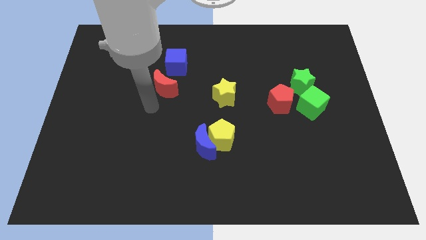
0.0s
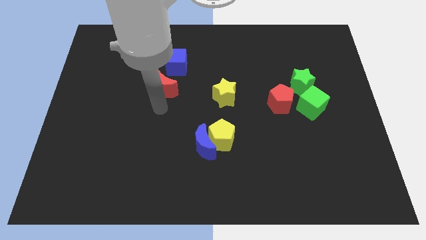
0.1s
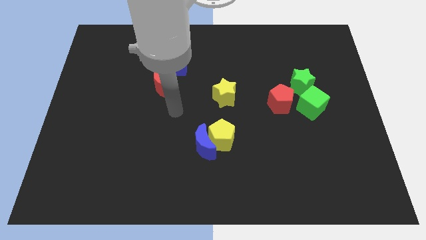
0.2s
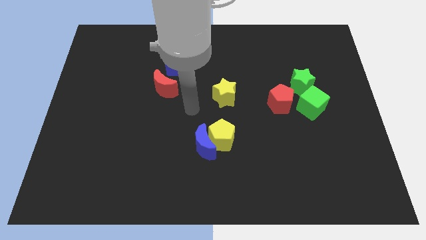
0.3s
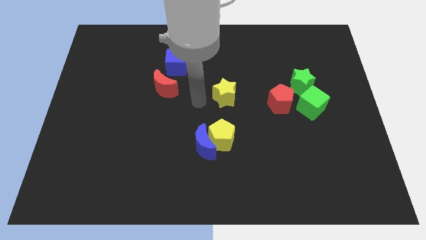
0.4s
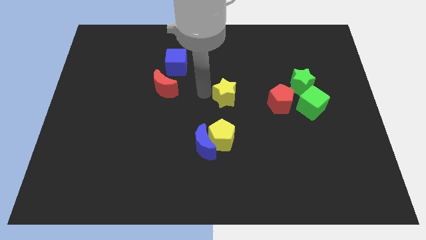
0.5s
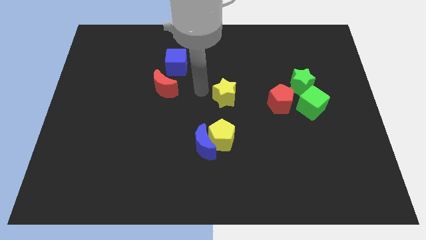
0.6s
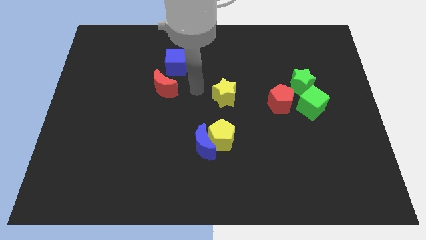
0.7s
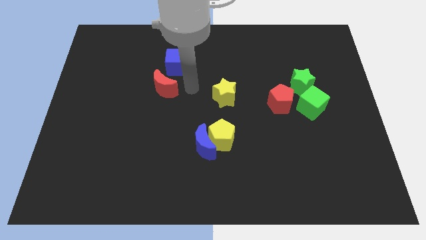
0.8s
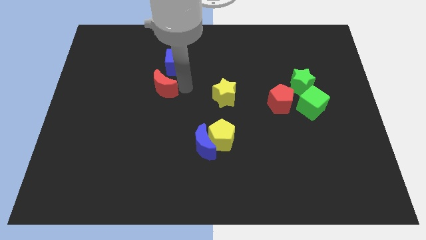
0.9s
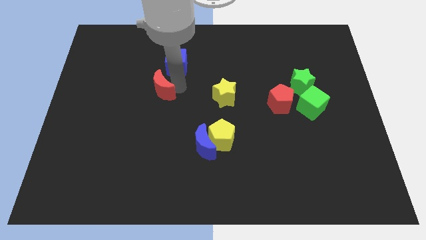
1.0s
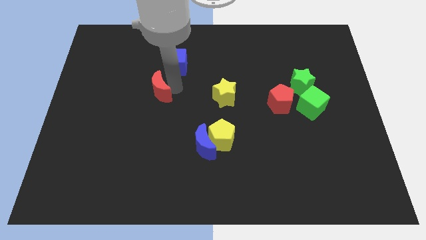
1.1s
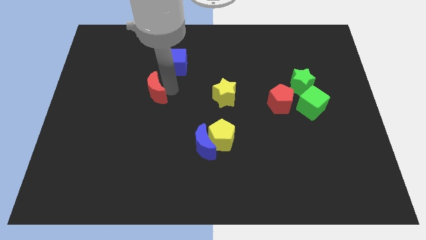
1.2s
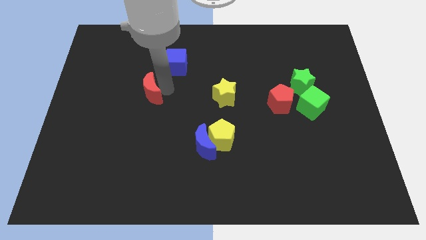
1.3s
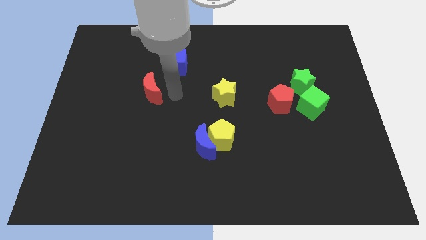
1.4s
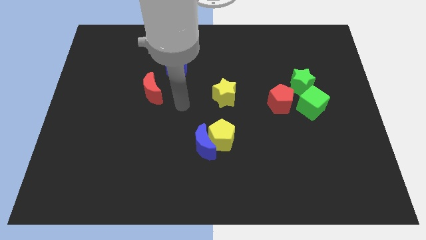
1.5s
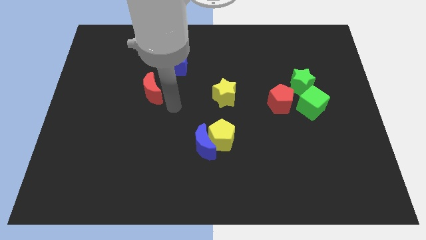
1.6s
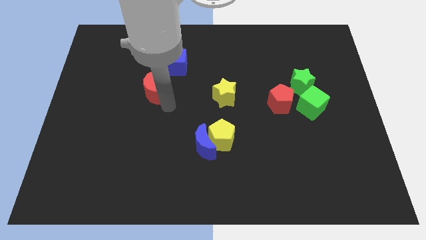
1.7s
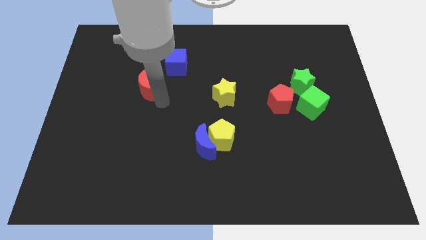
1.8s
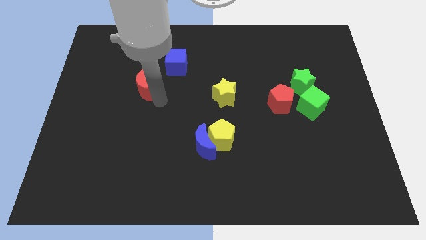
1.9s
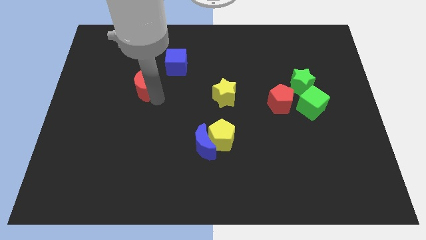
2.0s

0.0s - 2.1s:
move the red crescent slightly left

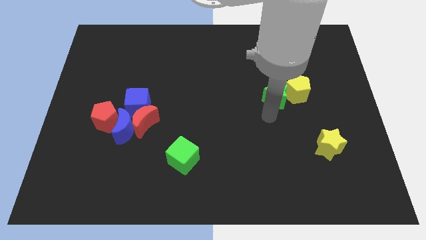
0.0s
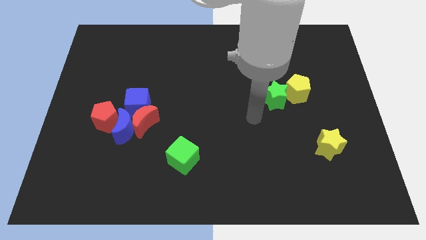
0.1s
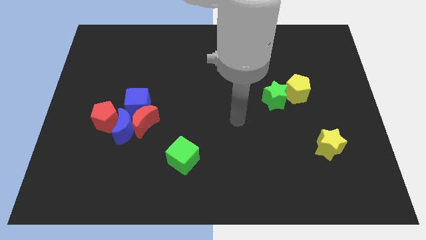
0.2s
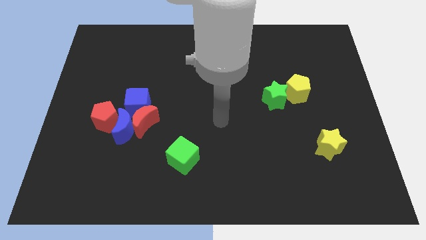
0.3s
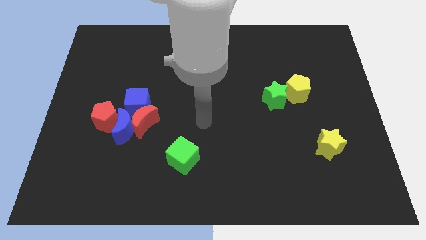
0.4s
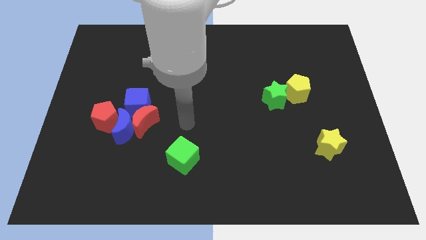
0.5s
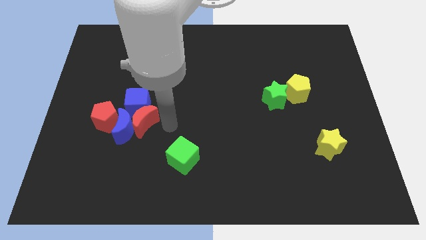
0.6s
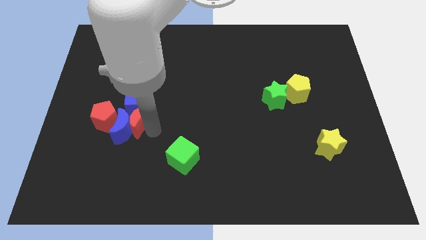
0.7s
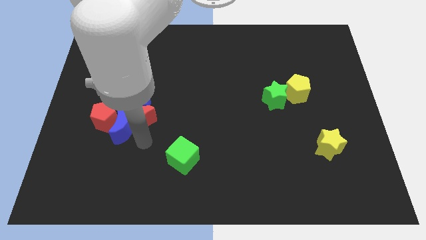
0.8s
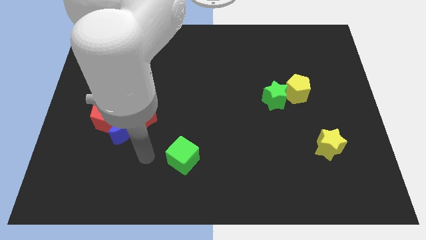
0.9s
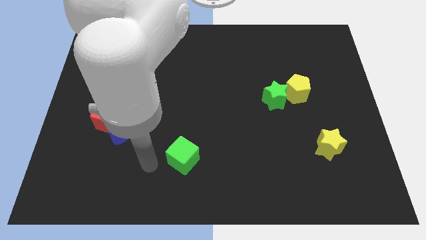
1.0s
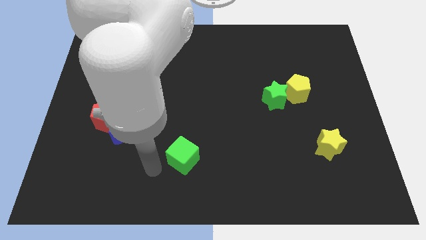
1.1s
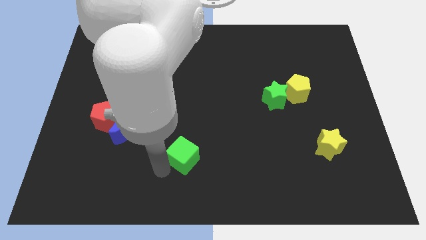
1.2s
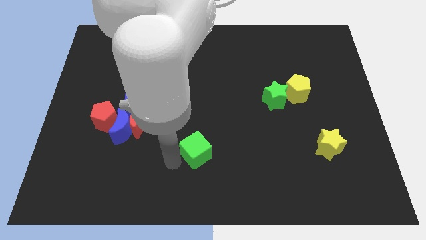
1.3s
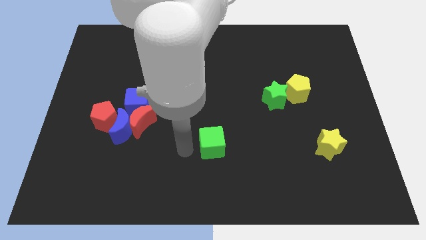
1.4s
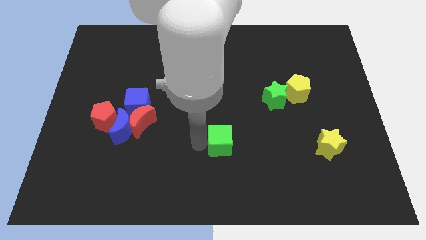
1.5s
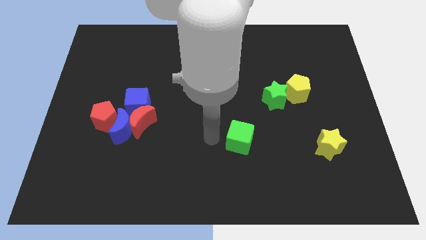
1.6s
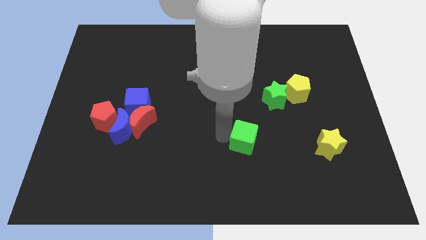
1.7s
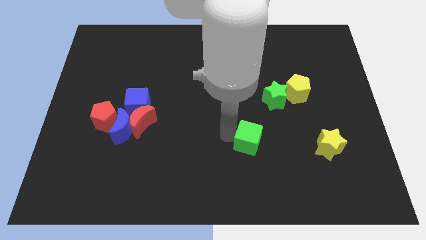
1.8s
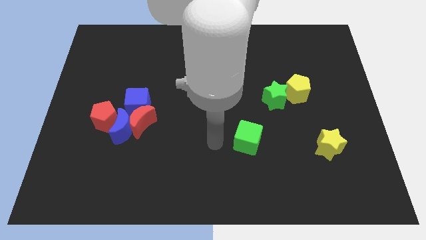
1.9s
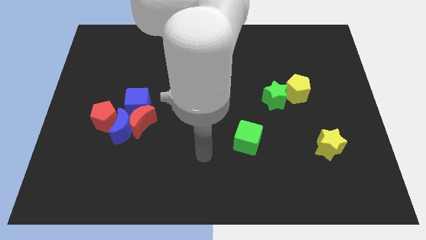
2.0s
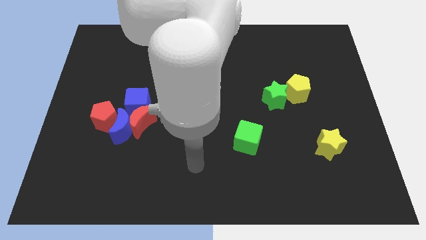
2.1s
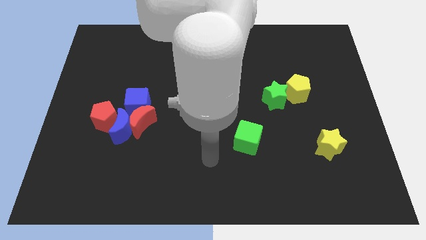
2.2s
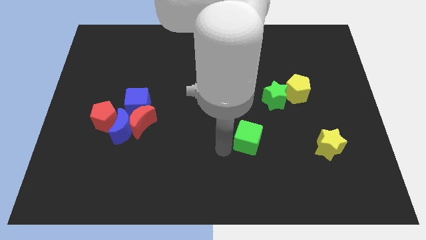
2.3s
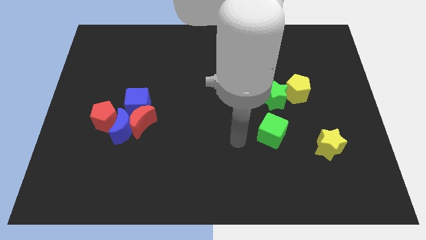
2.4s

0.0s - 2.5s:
place the green cube left to the yellow star

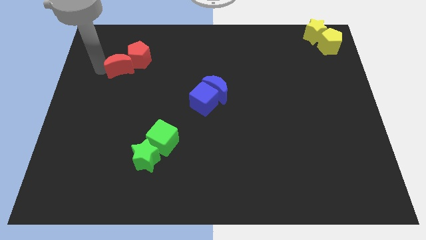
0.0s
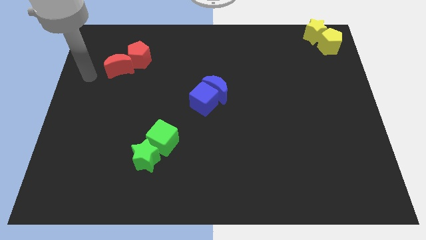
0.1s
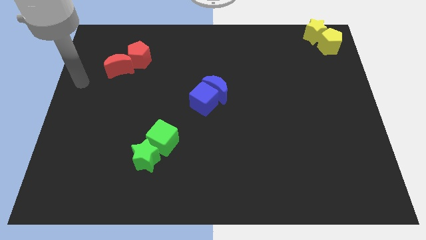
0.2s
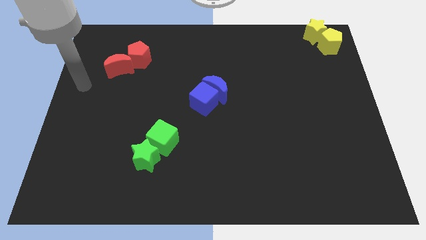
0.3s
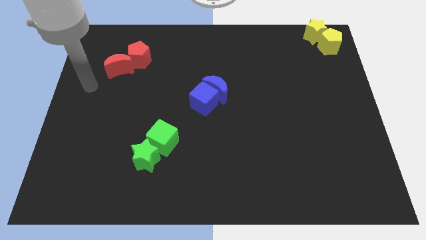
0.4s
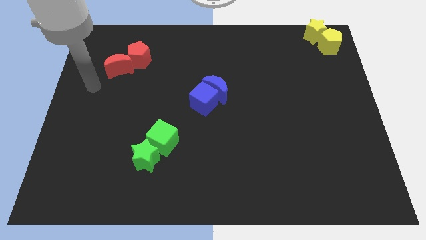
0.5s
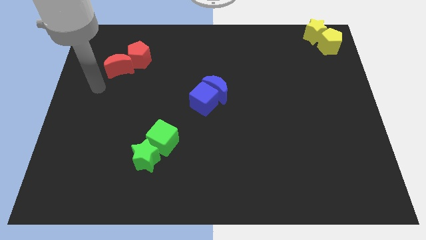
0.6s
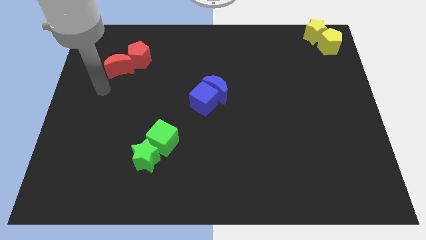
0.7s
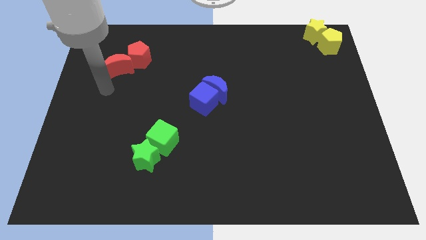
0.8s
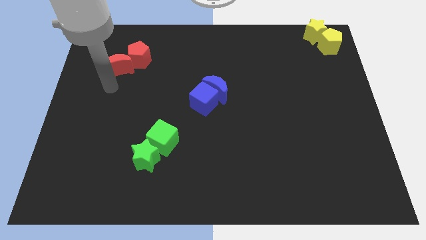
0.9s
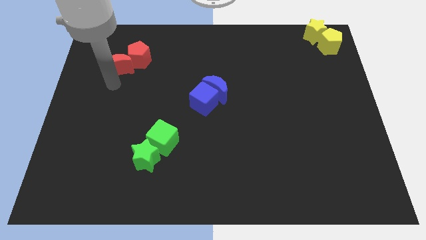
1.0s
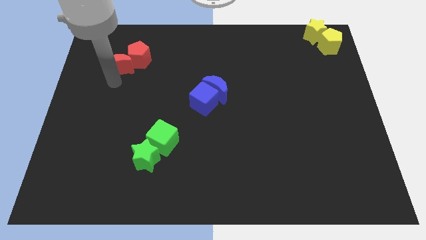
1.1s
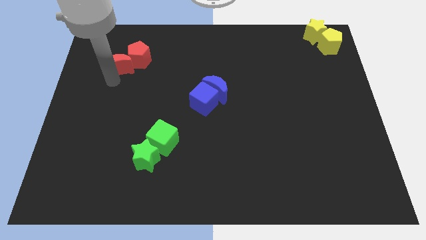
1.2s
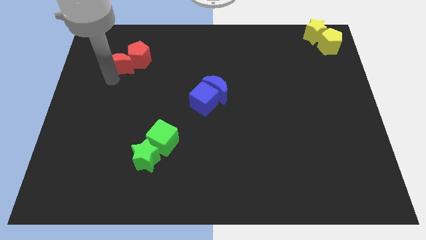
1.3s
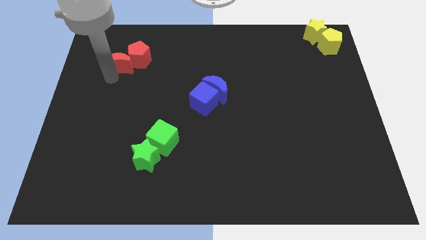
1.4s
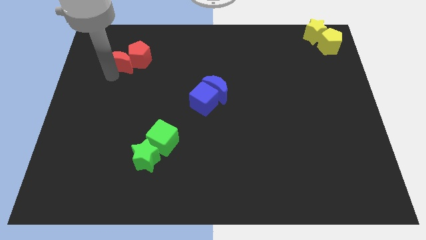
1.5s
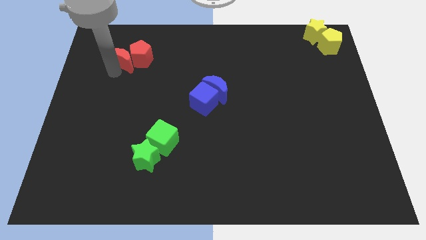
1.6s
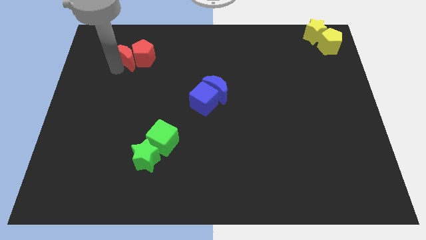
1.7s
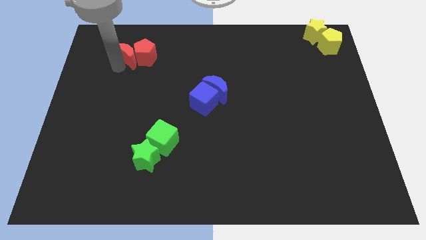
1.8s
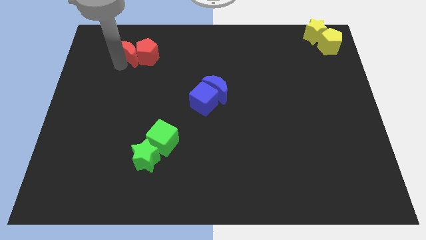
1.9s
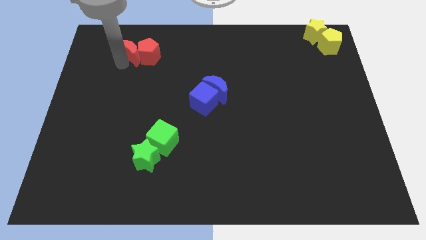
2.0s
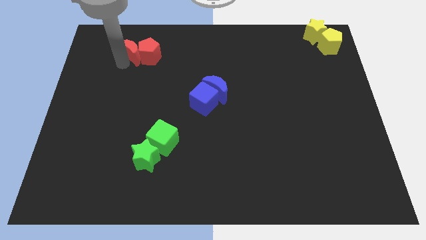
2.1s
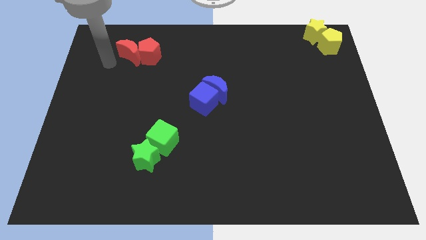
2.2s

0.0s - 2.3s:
place the red moon to the left of the red pentagon

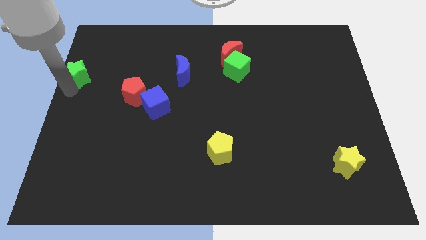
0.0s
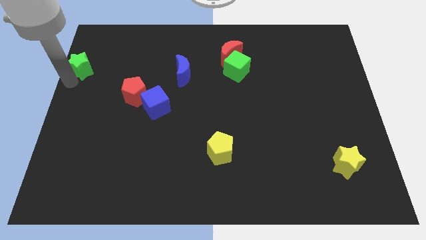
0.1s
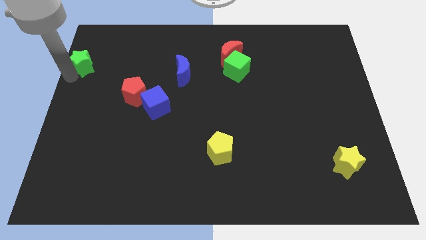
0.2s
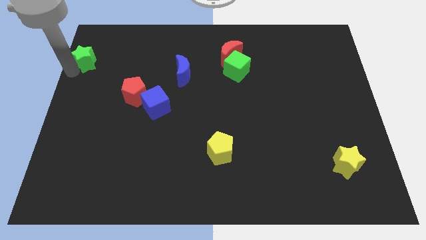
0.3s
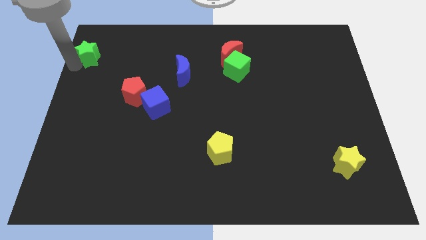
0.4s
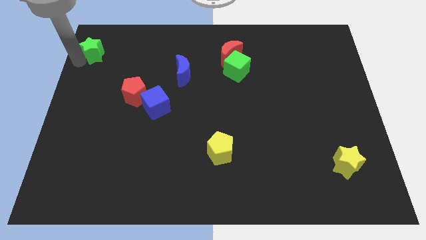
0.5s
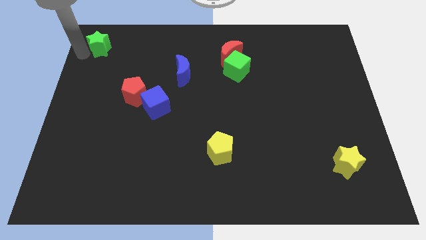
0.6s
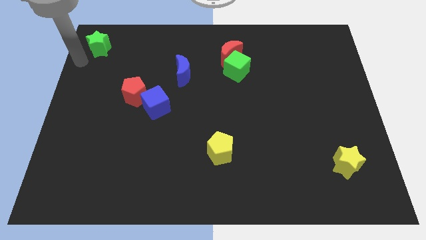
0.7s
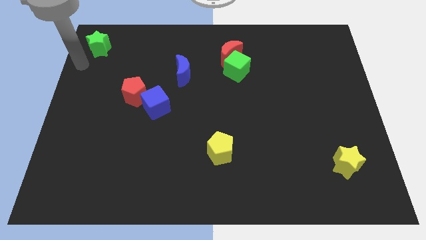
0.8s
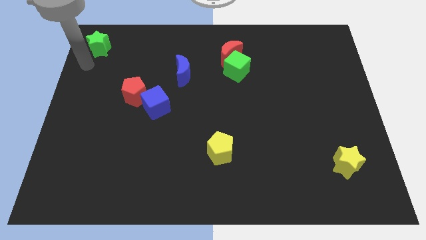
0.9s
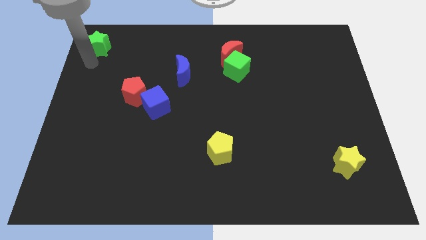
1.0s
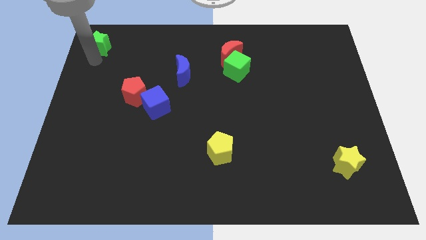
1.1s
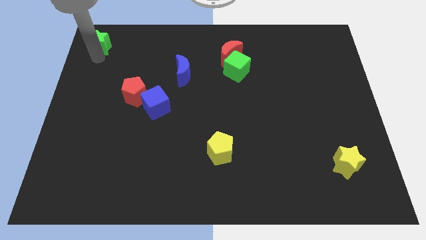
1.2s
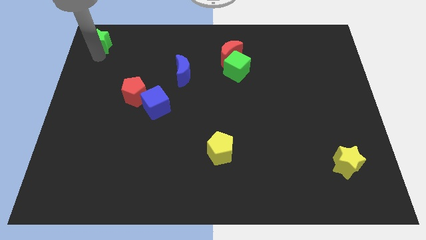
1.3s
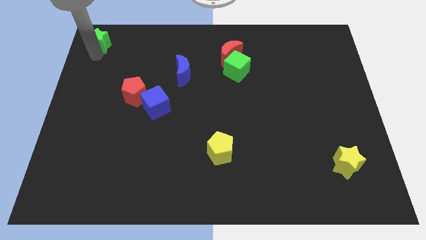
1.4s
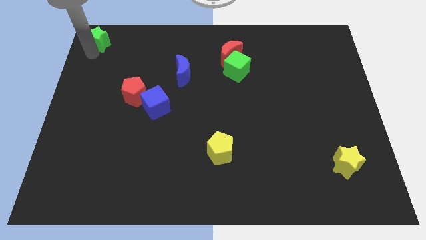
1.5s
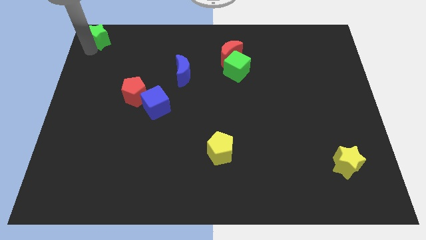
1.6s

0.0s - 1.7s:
place green star to the top left of the board

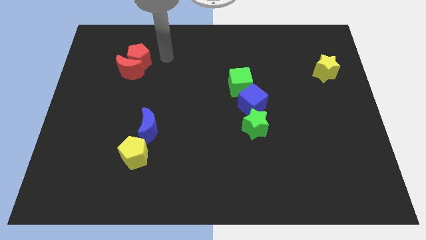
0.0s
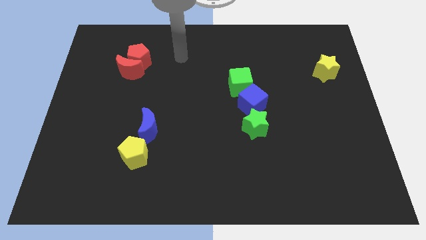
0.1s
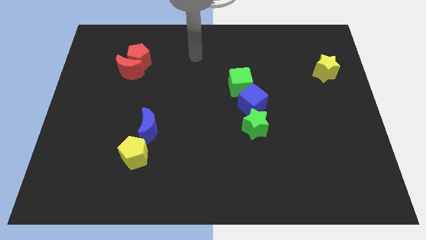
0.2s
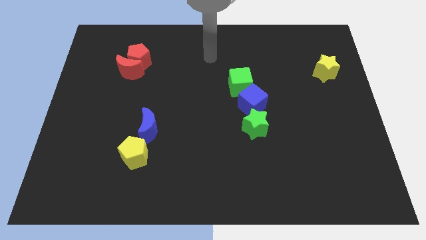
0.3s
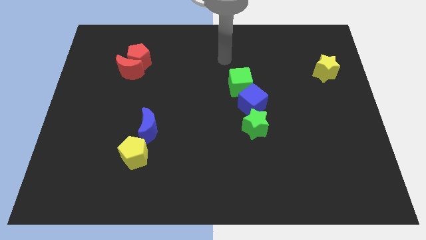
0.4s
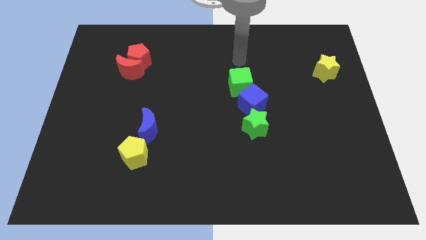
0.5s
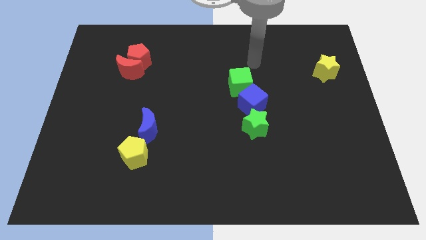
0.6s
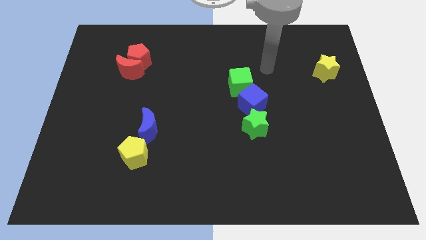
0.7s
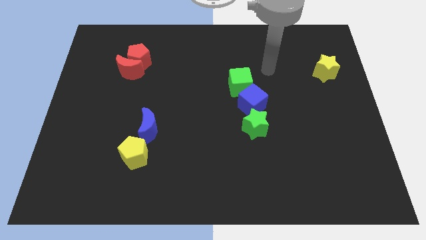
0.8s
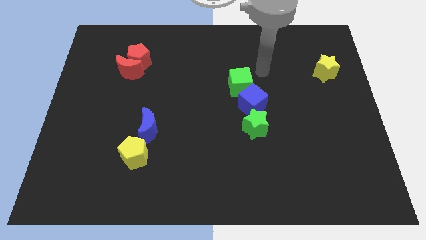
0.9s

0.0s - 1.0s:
move the arm towards right
